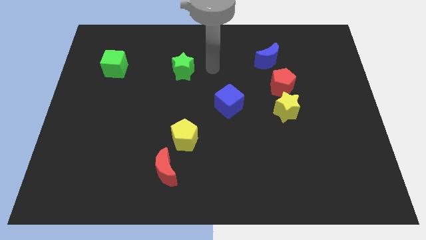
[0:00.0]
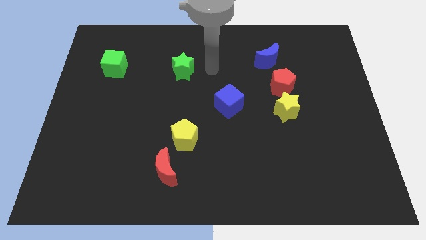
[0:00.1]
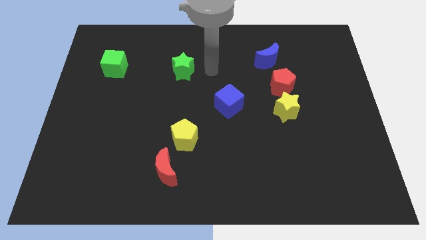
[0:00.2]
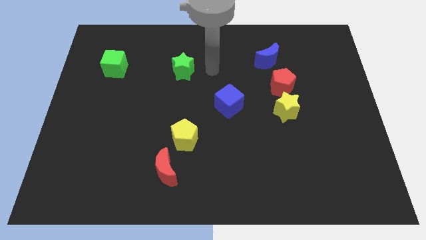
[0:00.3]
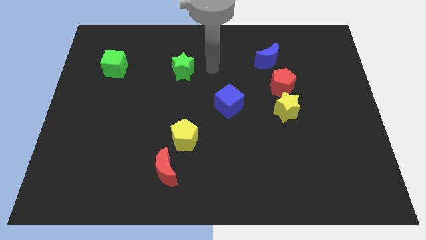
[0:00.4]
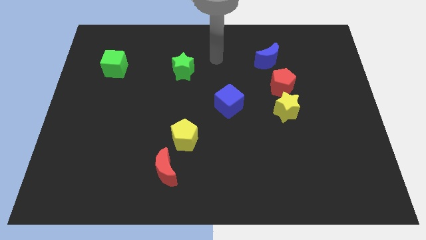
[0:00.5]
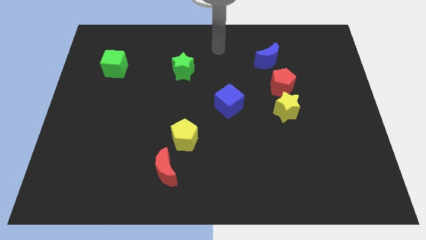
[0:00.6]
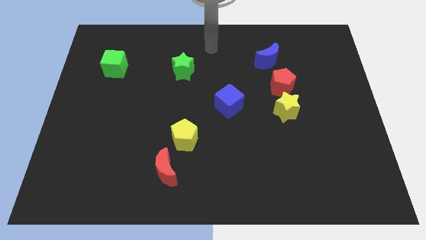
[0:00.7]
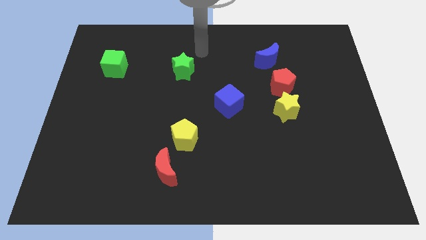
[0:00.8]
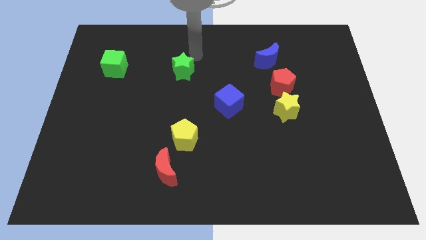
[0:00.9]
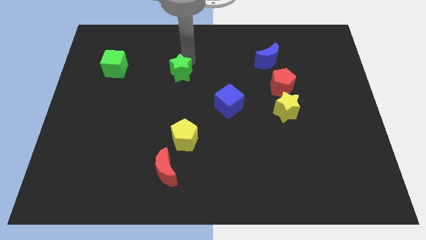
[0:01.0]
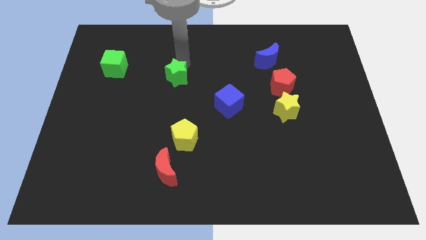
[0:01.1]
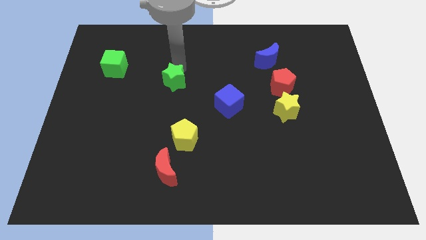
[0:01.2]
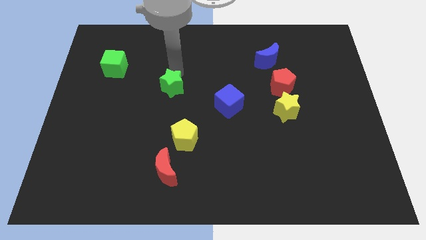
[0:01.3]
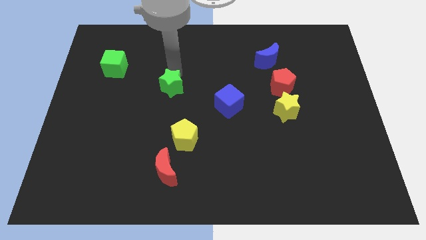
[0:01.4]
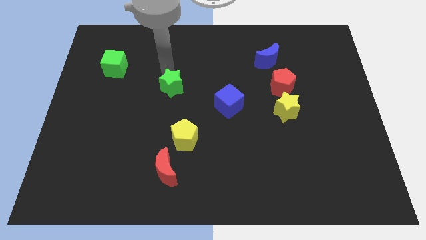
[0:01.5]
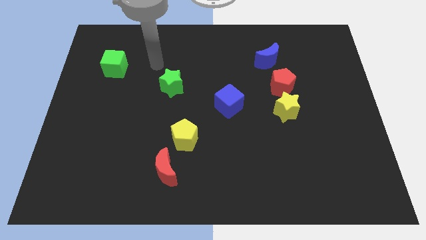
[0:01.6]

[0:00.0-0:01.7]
slide the green star diagonally in between the blue cube and green cube

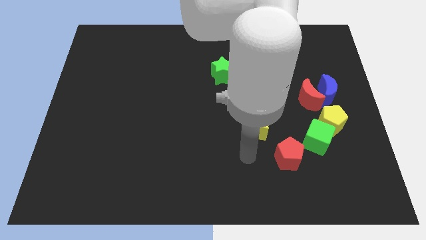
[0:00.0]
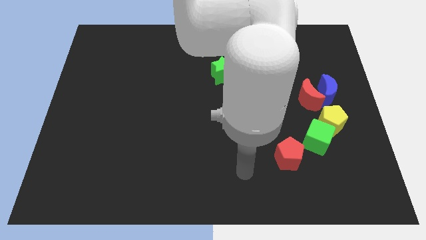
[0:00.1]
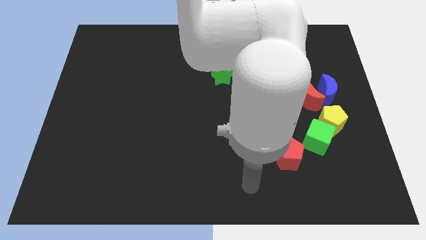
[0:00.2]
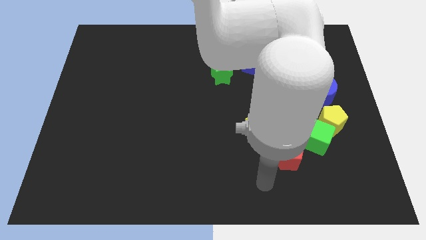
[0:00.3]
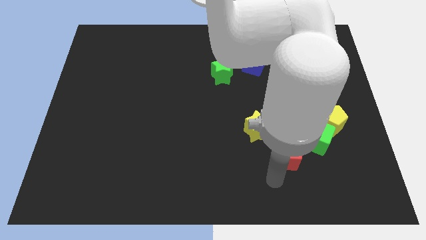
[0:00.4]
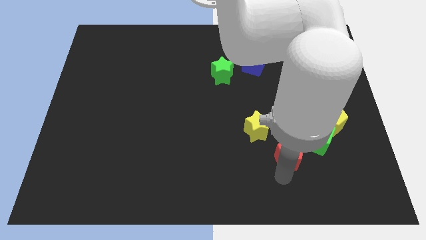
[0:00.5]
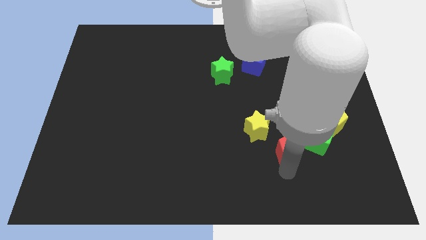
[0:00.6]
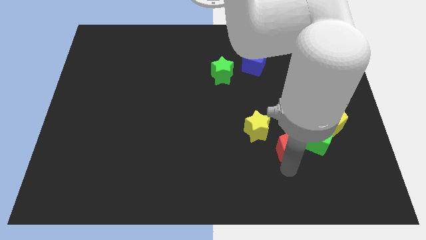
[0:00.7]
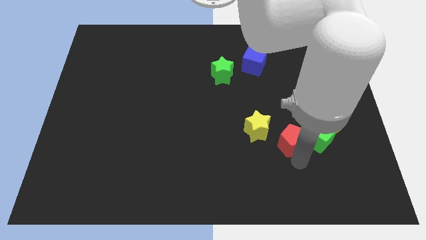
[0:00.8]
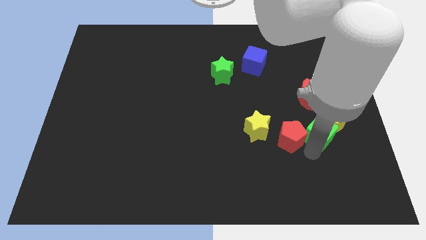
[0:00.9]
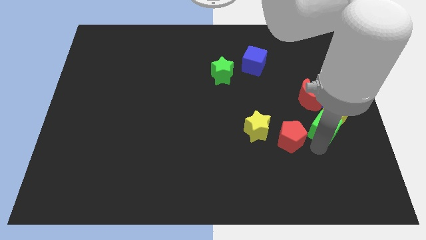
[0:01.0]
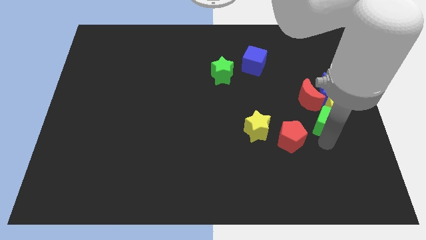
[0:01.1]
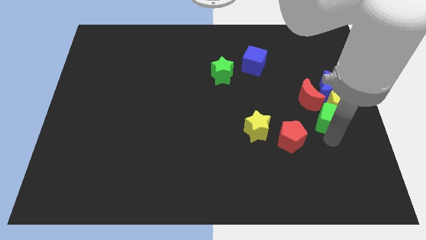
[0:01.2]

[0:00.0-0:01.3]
push the red pentagon into the green cube

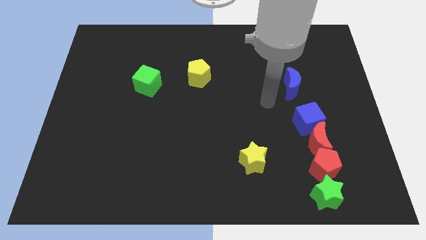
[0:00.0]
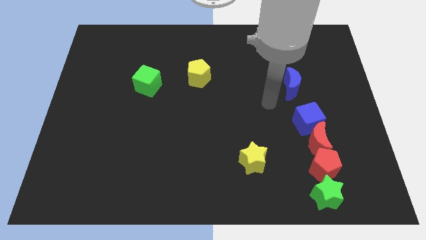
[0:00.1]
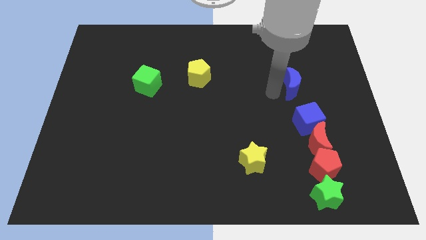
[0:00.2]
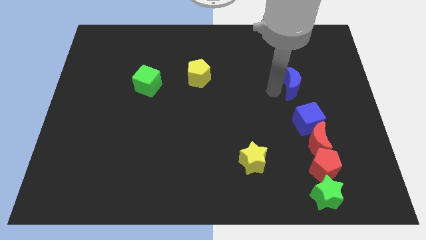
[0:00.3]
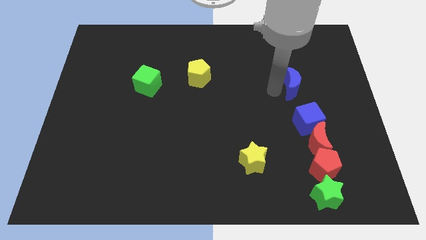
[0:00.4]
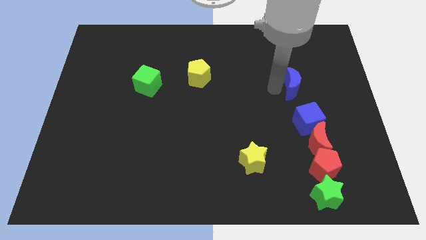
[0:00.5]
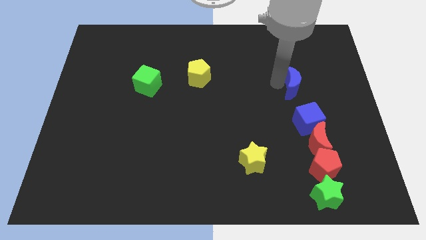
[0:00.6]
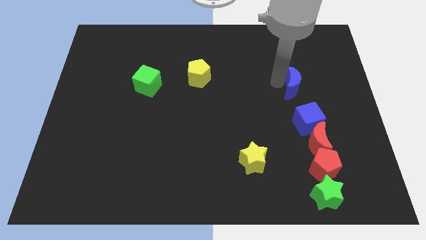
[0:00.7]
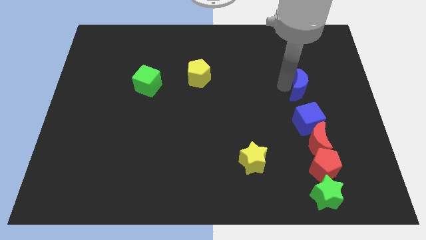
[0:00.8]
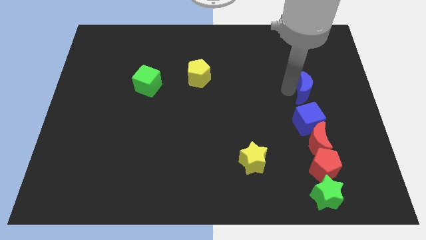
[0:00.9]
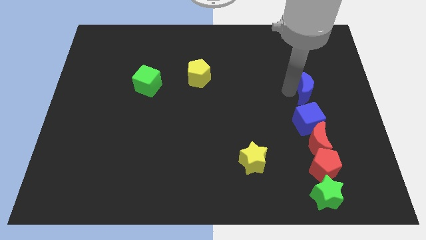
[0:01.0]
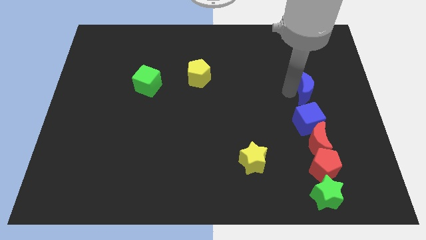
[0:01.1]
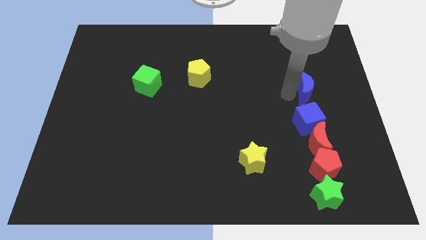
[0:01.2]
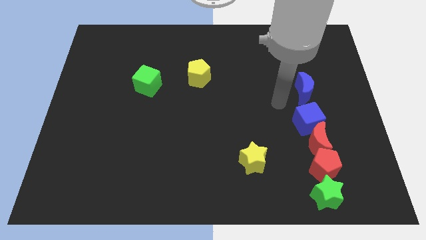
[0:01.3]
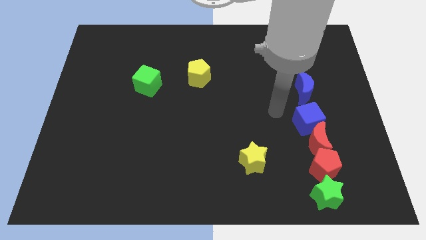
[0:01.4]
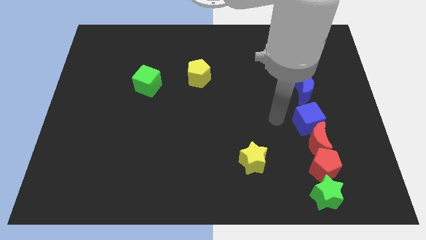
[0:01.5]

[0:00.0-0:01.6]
place the blue crescent above to the blue cube

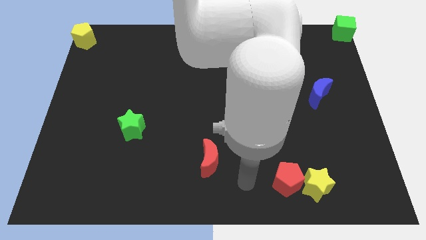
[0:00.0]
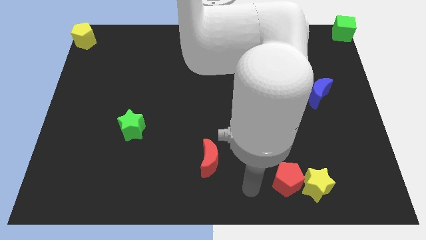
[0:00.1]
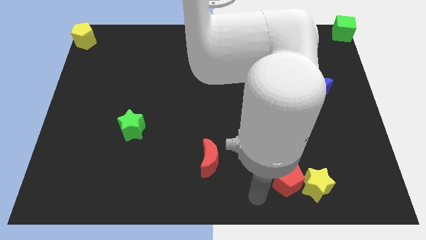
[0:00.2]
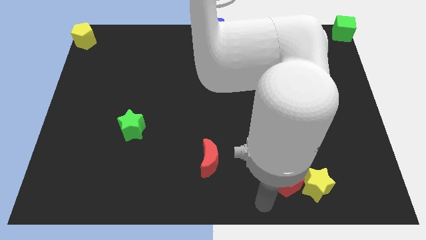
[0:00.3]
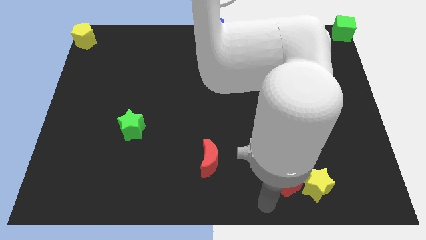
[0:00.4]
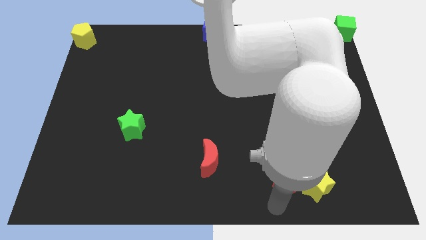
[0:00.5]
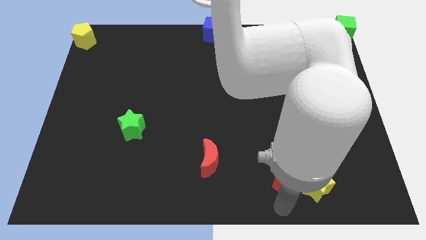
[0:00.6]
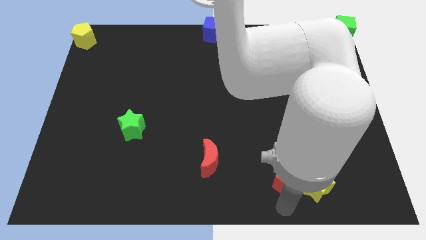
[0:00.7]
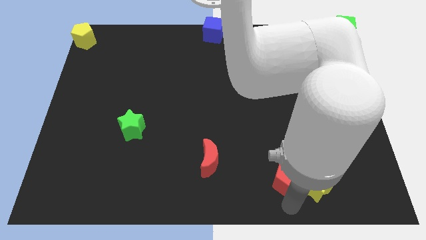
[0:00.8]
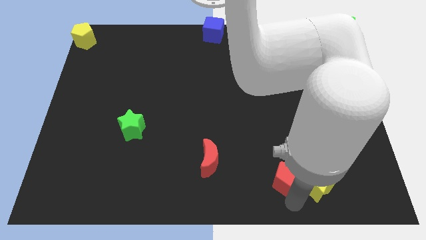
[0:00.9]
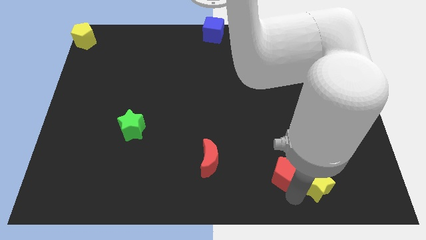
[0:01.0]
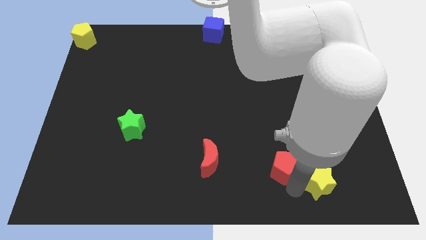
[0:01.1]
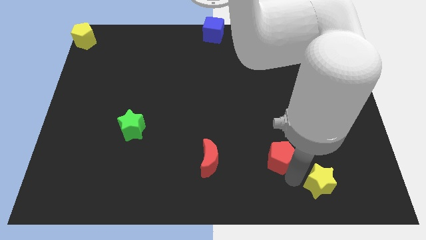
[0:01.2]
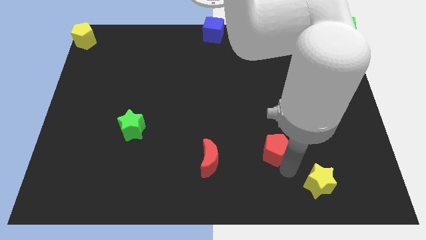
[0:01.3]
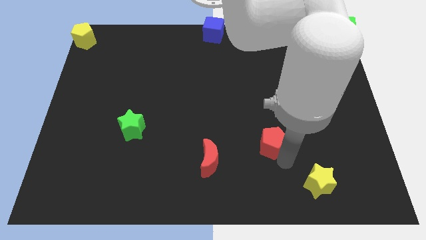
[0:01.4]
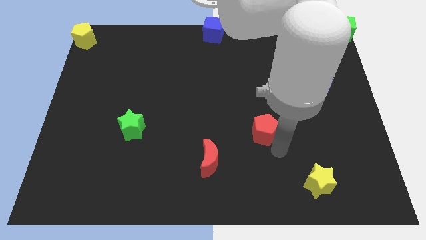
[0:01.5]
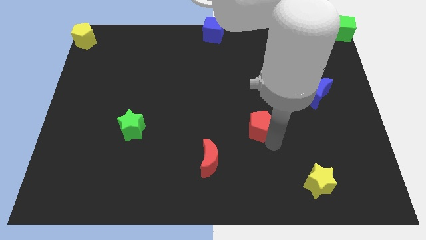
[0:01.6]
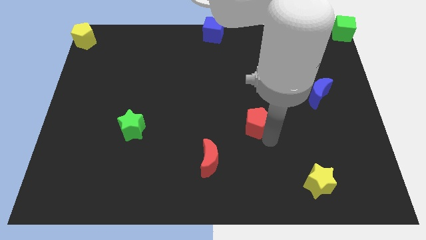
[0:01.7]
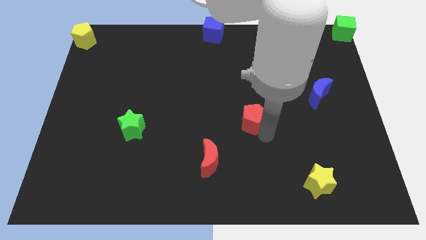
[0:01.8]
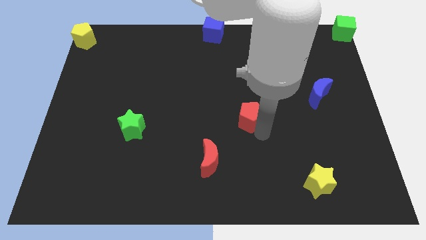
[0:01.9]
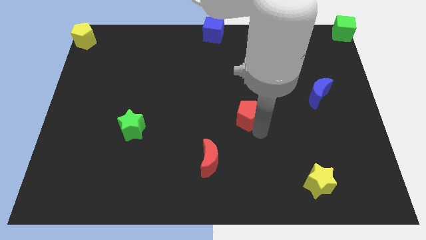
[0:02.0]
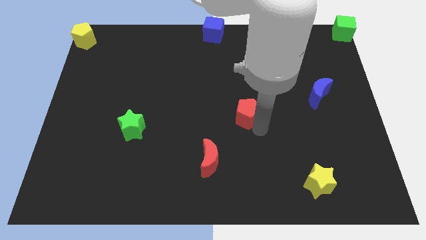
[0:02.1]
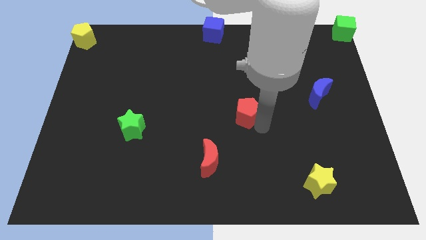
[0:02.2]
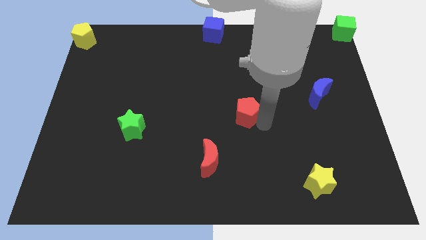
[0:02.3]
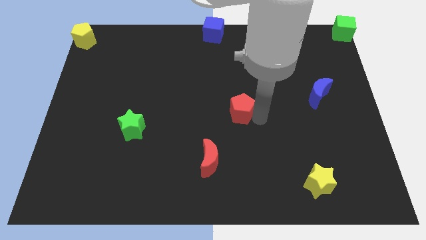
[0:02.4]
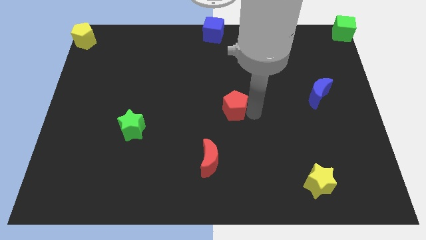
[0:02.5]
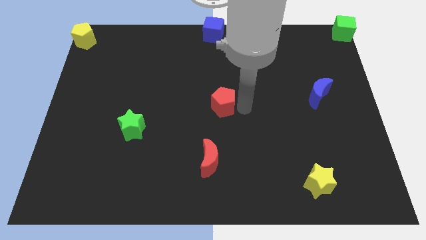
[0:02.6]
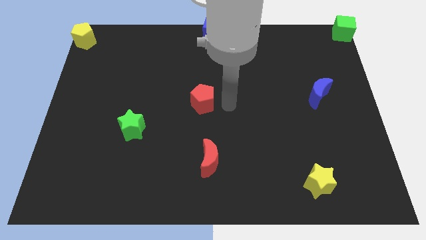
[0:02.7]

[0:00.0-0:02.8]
move the red pentagon above the red crescent

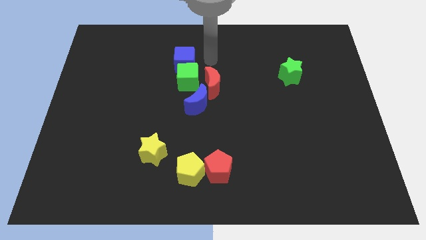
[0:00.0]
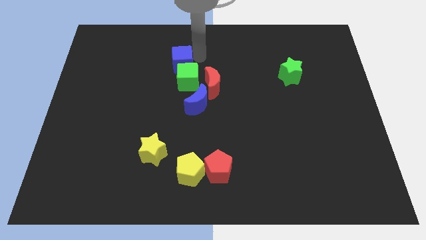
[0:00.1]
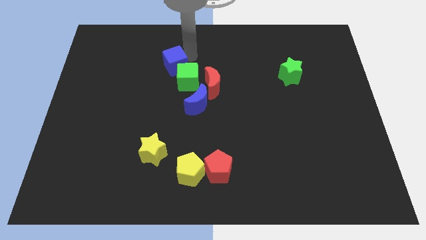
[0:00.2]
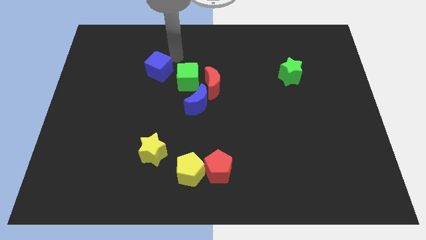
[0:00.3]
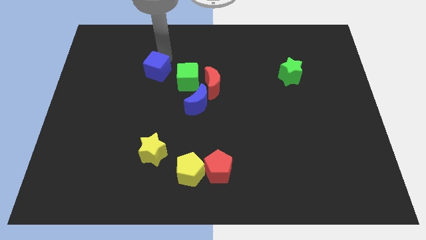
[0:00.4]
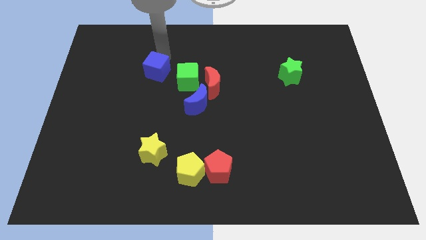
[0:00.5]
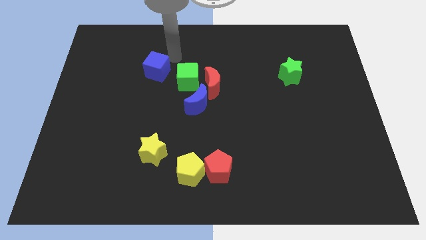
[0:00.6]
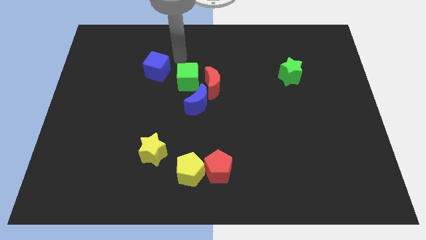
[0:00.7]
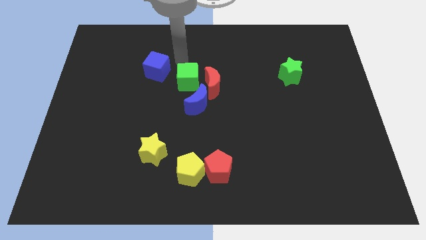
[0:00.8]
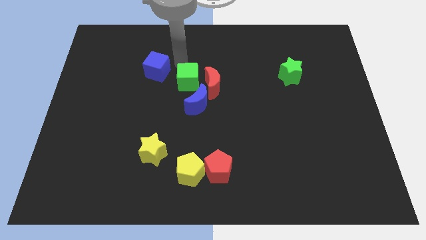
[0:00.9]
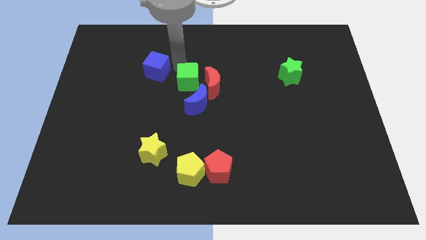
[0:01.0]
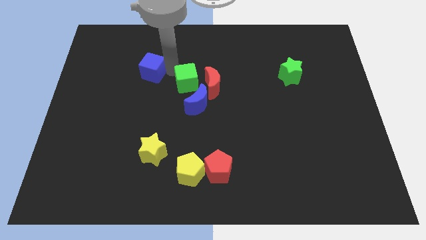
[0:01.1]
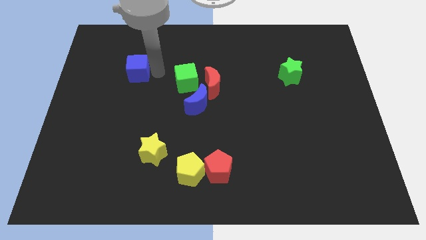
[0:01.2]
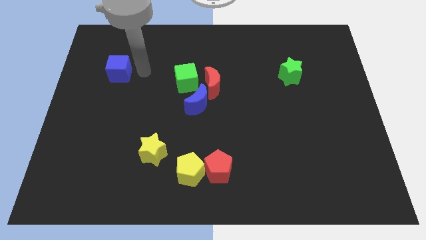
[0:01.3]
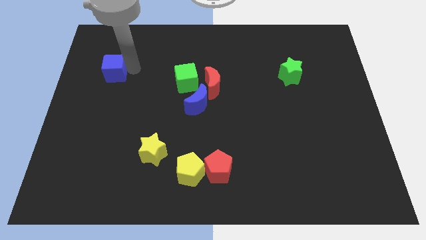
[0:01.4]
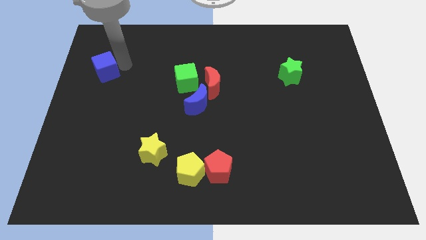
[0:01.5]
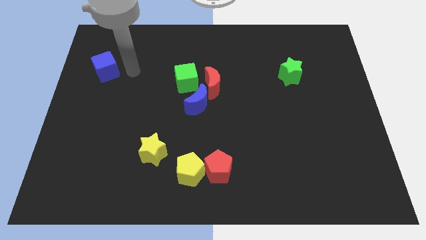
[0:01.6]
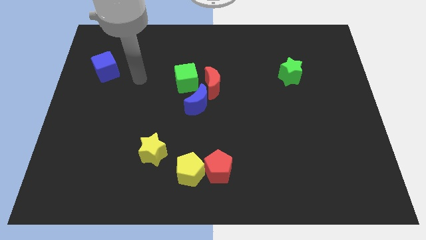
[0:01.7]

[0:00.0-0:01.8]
move the blue cube towards left side
